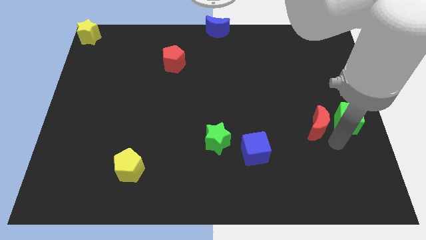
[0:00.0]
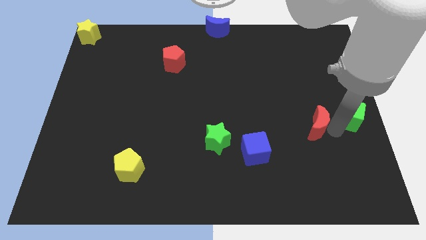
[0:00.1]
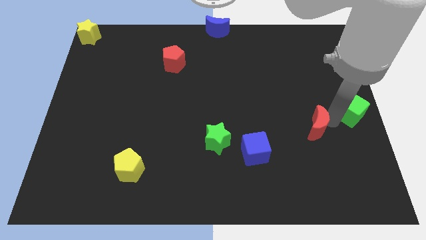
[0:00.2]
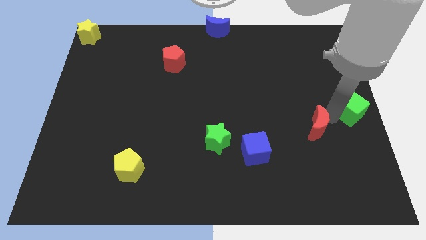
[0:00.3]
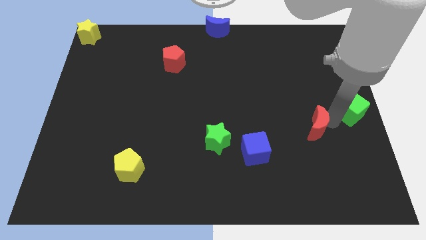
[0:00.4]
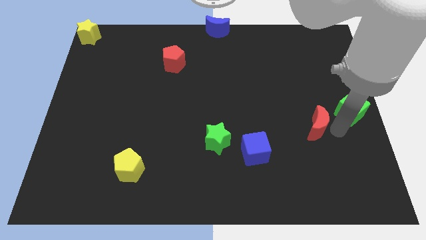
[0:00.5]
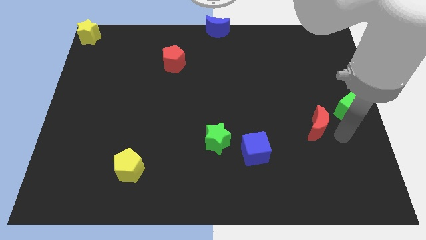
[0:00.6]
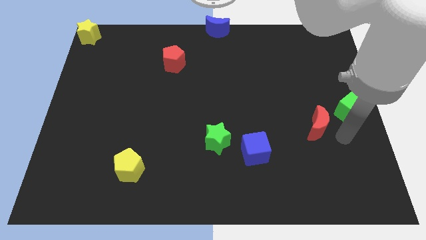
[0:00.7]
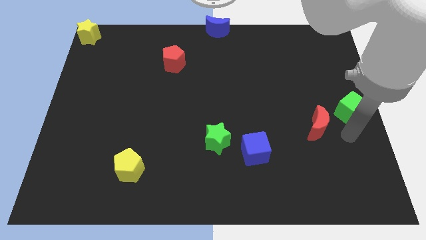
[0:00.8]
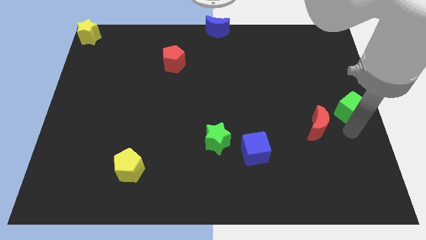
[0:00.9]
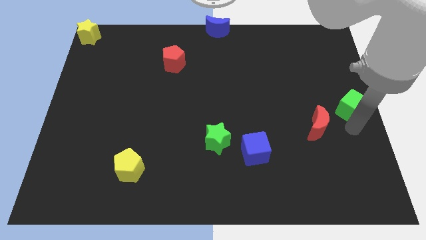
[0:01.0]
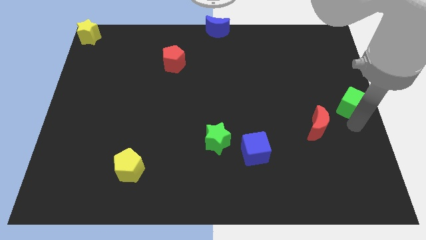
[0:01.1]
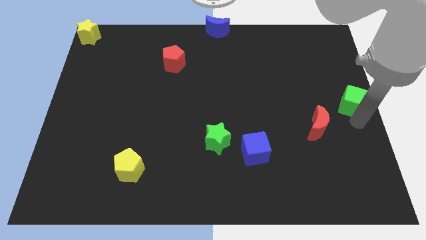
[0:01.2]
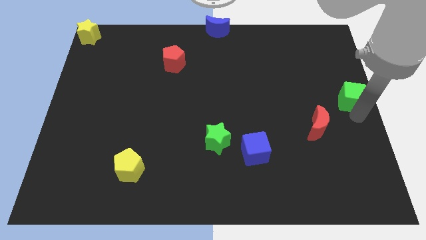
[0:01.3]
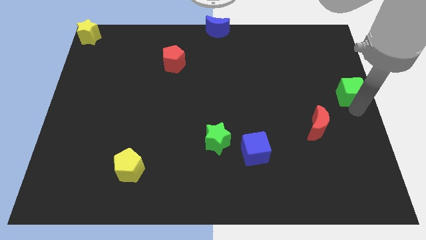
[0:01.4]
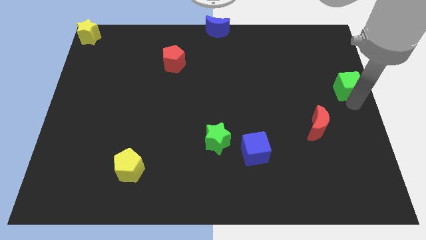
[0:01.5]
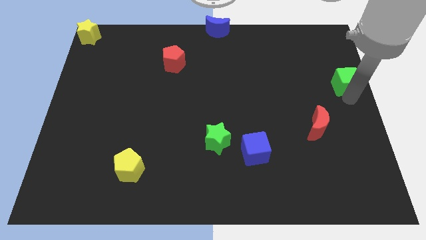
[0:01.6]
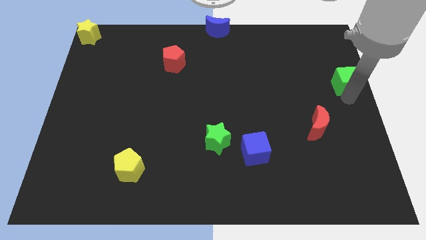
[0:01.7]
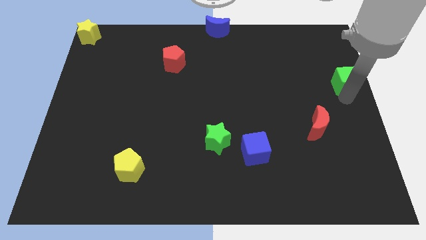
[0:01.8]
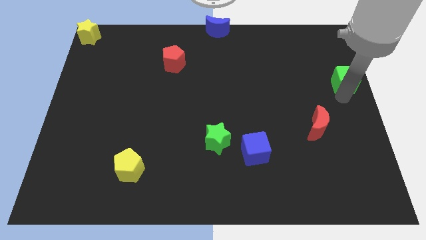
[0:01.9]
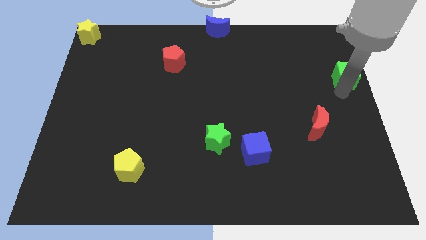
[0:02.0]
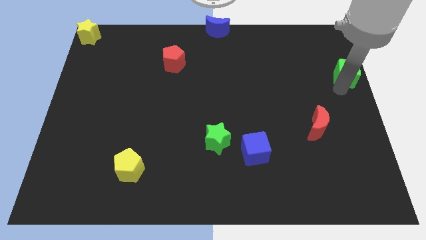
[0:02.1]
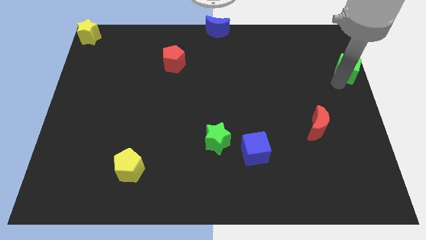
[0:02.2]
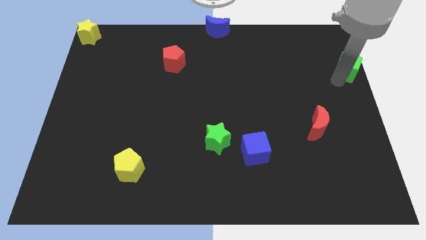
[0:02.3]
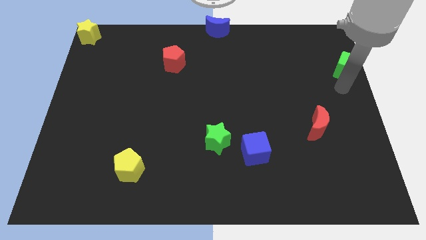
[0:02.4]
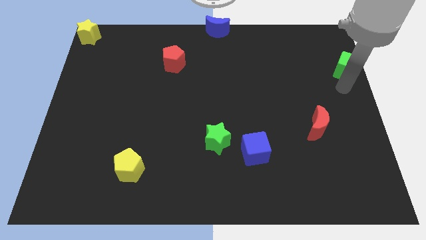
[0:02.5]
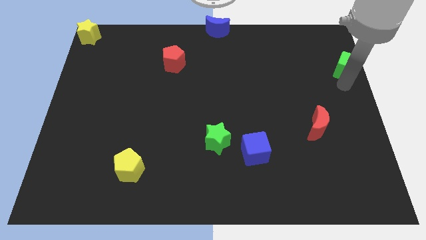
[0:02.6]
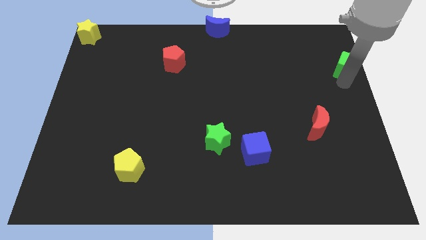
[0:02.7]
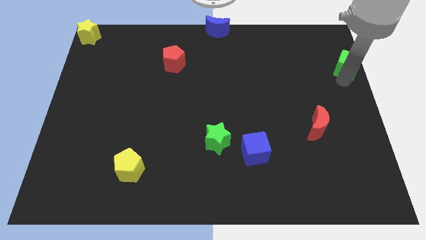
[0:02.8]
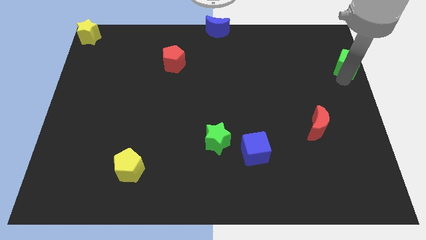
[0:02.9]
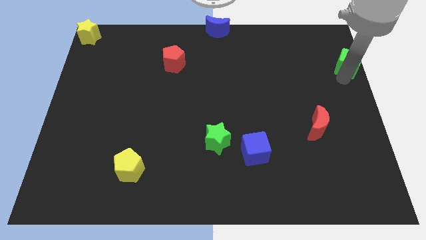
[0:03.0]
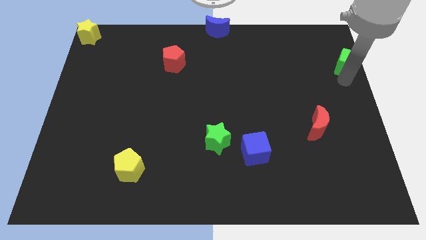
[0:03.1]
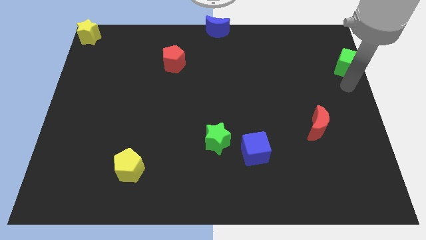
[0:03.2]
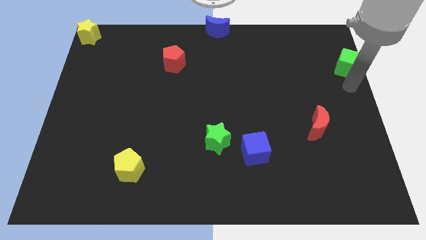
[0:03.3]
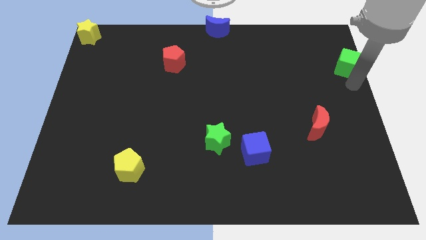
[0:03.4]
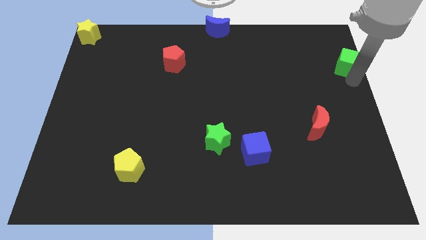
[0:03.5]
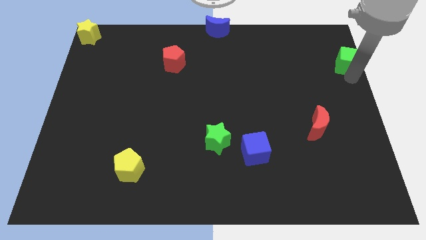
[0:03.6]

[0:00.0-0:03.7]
separate the green cube and red moon

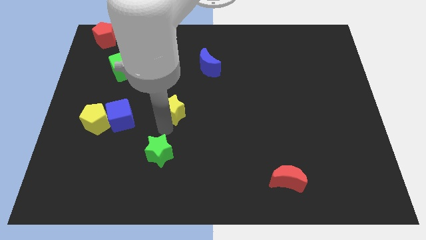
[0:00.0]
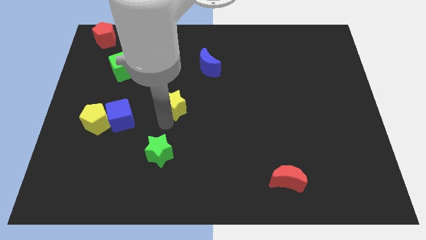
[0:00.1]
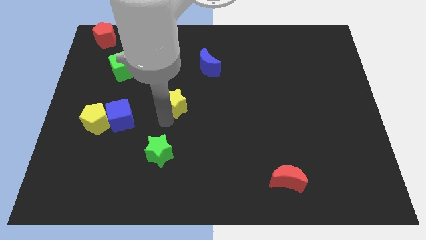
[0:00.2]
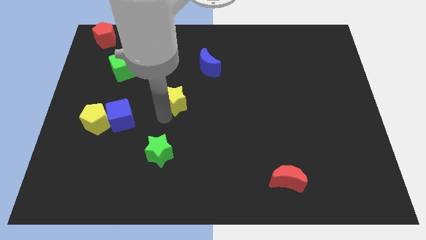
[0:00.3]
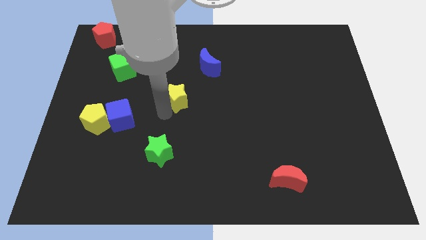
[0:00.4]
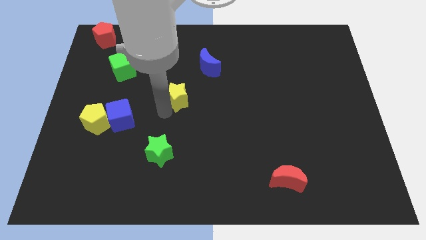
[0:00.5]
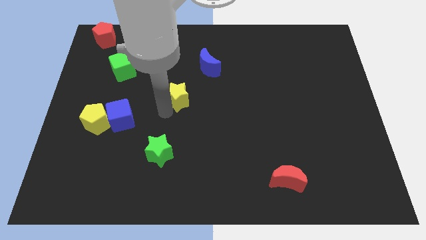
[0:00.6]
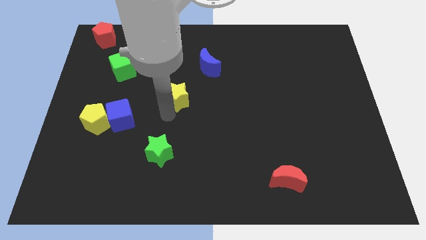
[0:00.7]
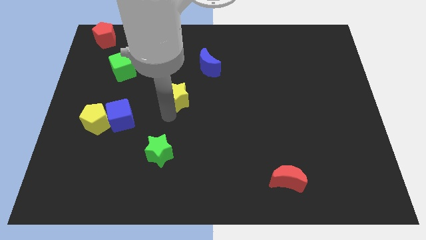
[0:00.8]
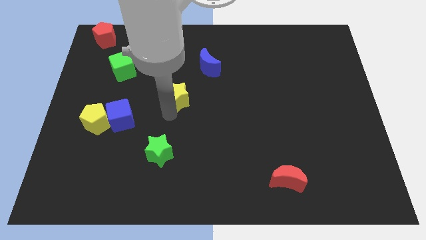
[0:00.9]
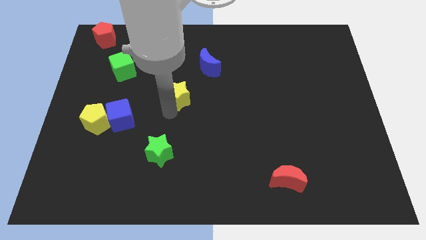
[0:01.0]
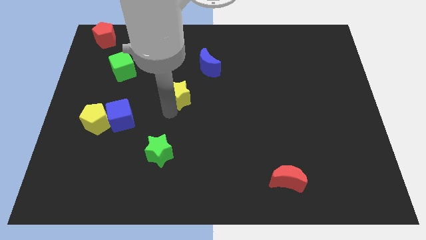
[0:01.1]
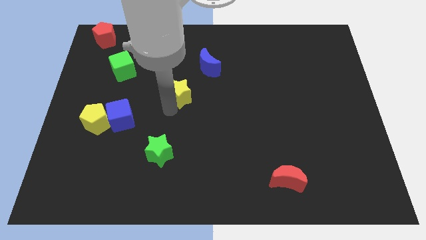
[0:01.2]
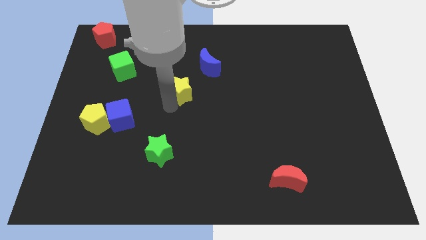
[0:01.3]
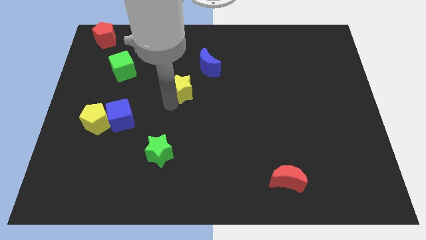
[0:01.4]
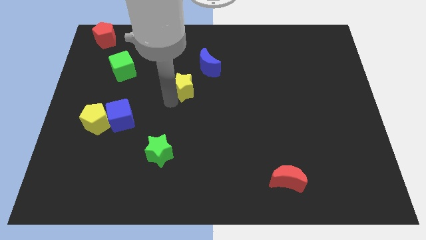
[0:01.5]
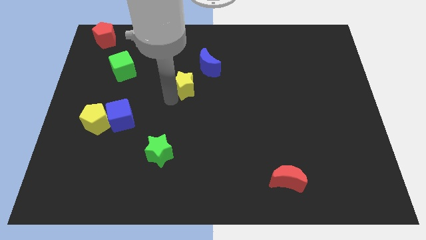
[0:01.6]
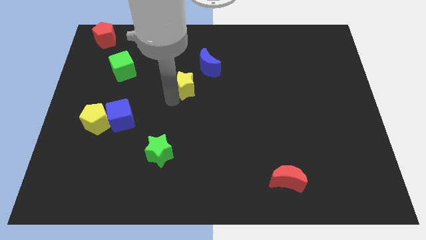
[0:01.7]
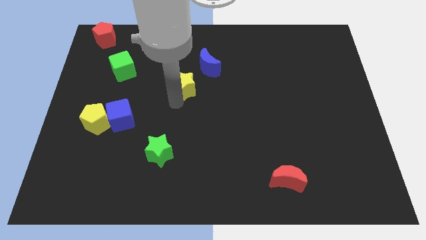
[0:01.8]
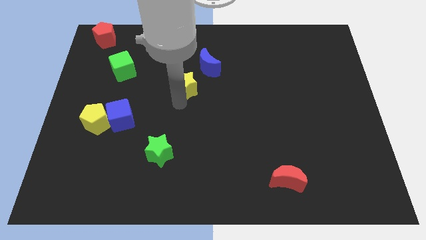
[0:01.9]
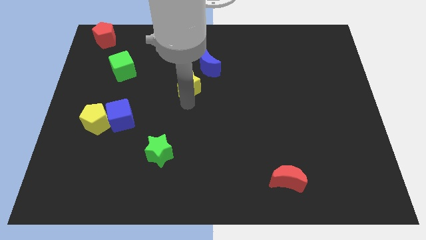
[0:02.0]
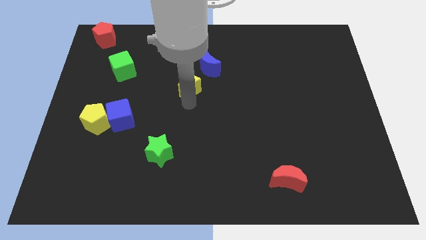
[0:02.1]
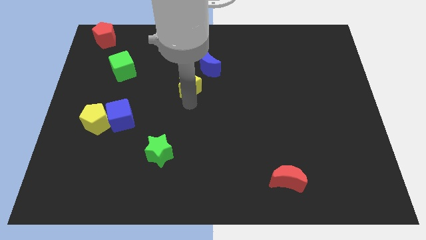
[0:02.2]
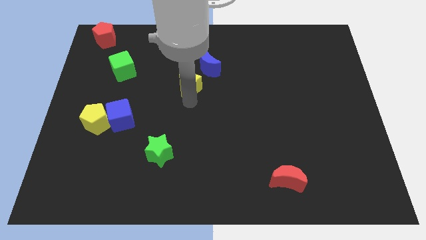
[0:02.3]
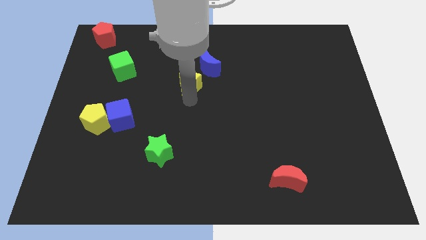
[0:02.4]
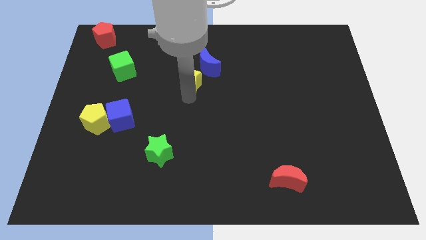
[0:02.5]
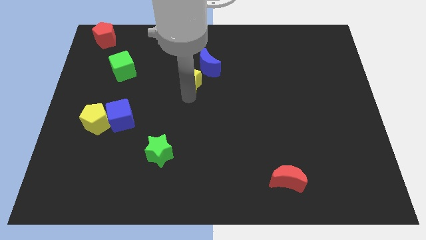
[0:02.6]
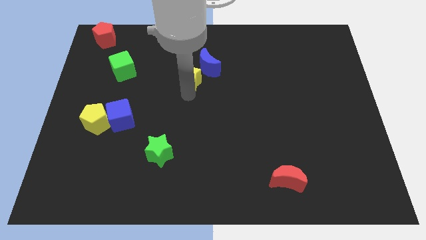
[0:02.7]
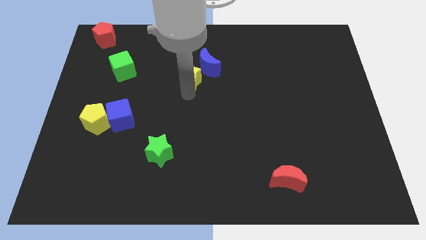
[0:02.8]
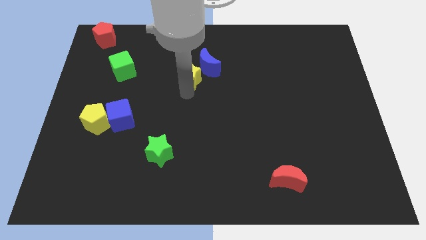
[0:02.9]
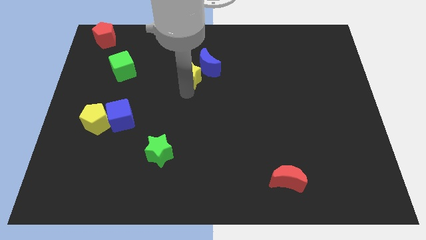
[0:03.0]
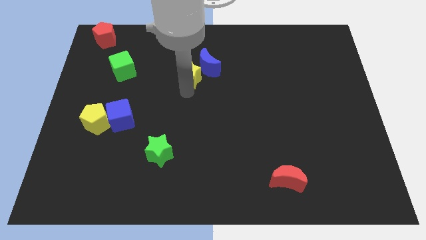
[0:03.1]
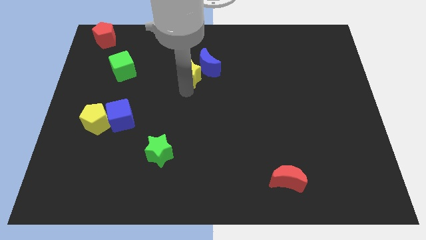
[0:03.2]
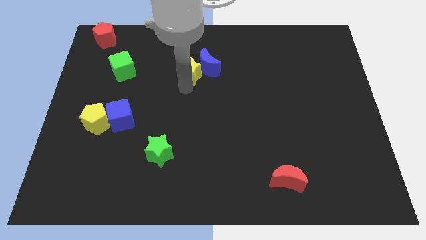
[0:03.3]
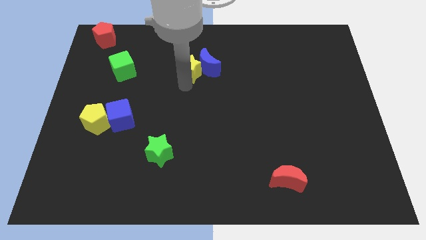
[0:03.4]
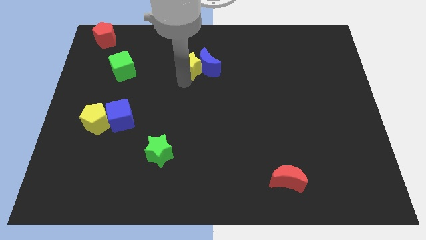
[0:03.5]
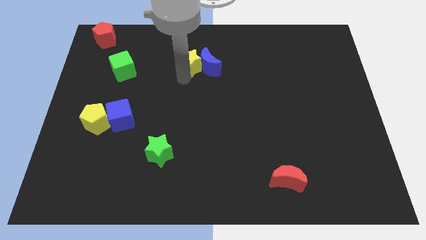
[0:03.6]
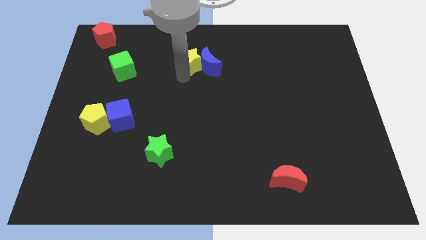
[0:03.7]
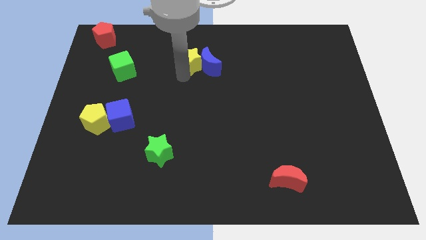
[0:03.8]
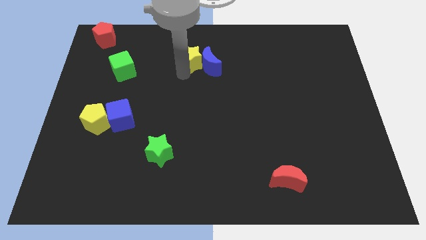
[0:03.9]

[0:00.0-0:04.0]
push the yellow star into the blue moon

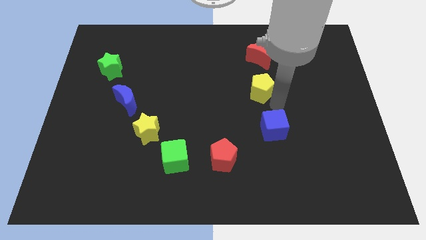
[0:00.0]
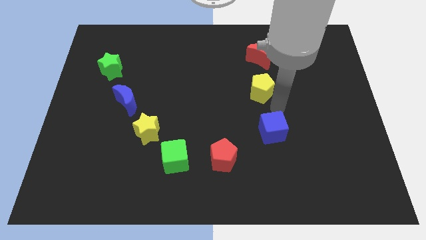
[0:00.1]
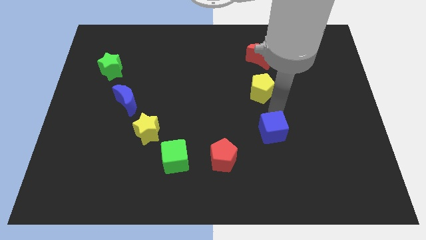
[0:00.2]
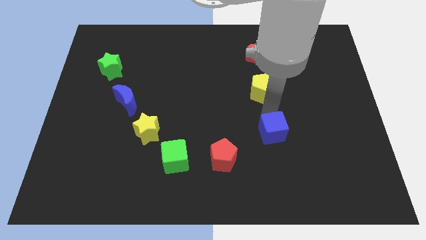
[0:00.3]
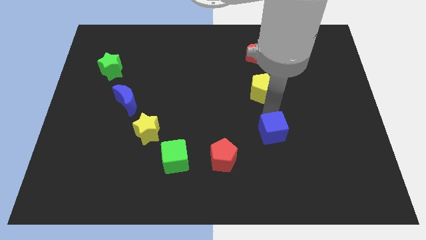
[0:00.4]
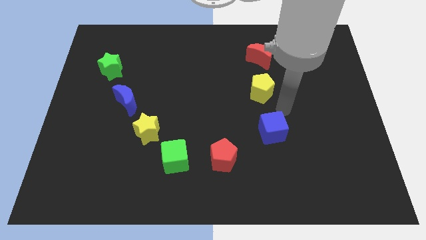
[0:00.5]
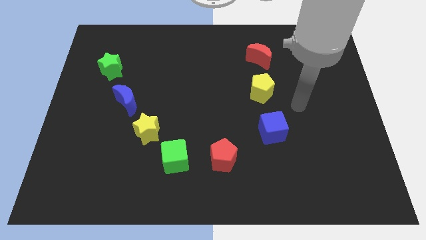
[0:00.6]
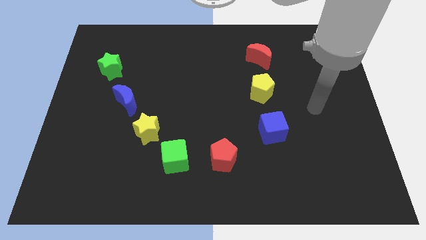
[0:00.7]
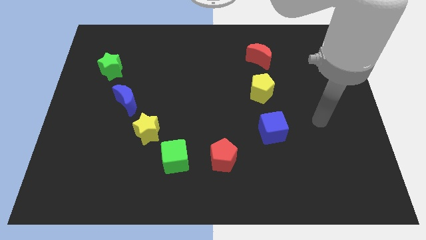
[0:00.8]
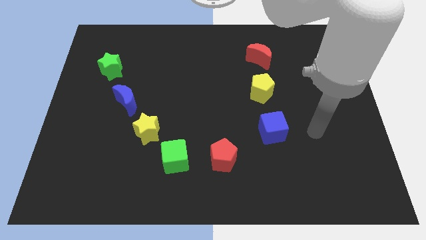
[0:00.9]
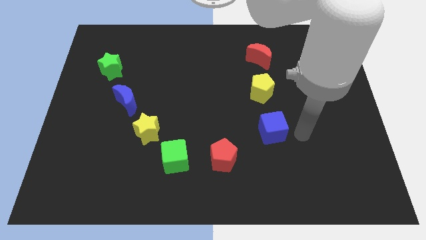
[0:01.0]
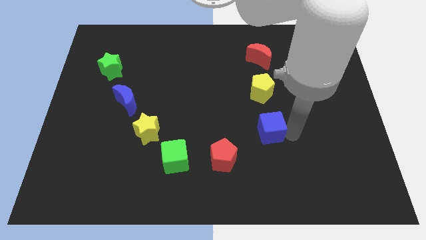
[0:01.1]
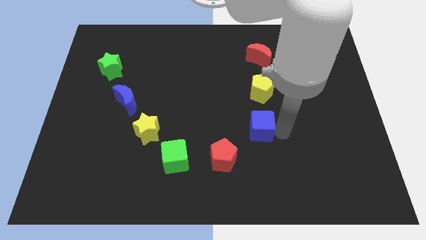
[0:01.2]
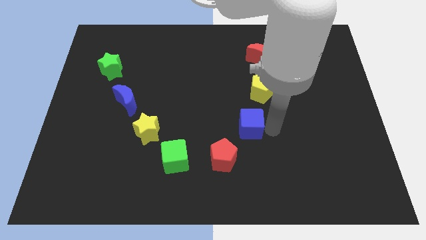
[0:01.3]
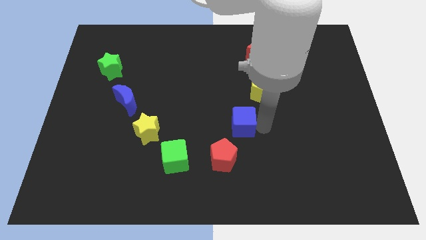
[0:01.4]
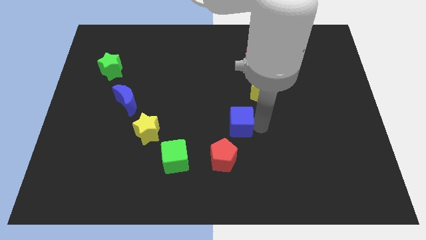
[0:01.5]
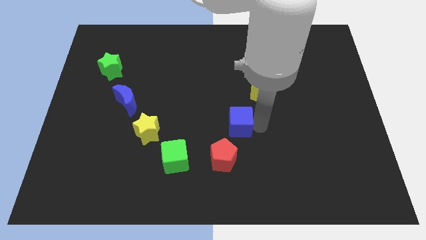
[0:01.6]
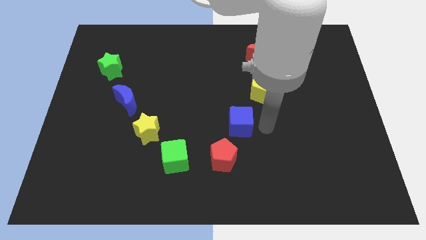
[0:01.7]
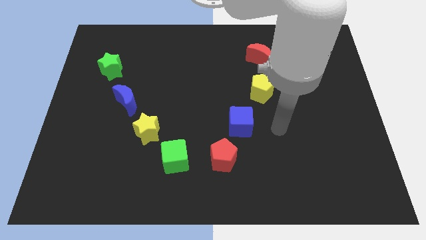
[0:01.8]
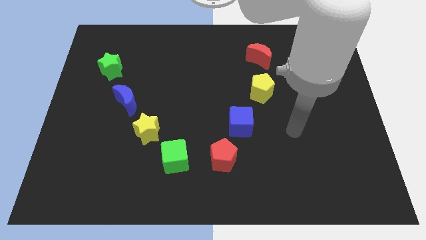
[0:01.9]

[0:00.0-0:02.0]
move the blue cube to the bottom left side of the yellow pentagon
